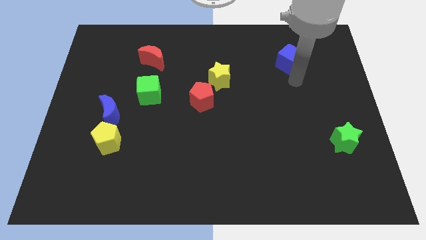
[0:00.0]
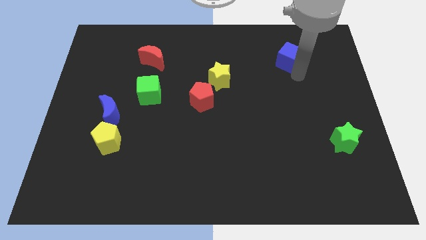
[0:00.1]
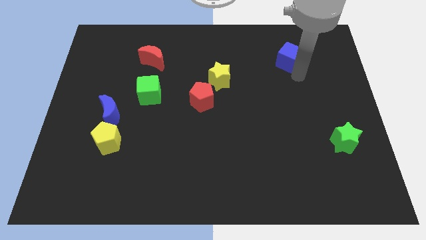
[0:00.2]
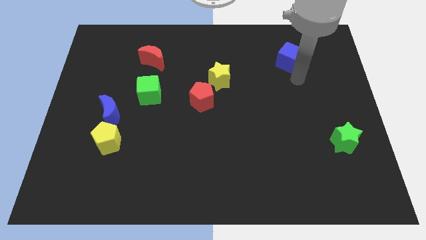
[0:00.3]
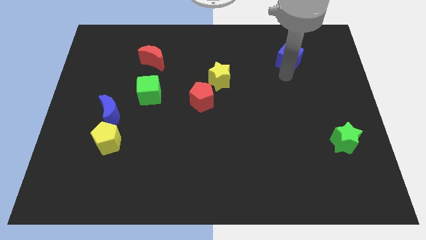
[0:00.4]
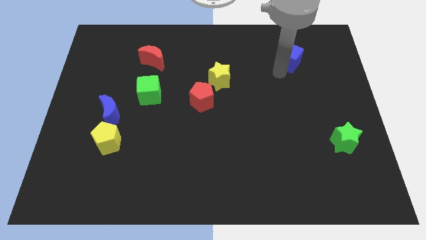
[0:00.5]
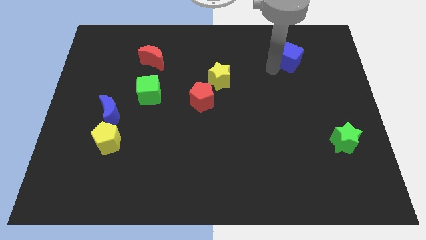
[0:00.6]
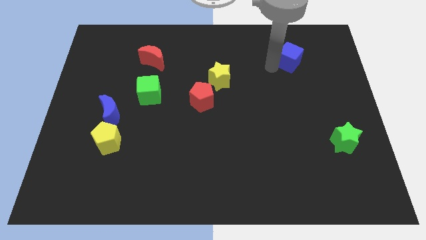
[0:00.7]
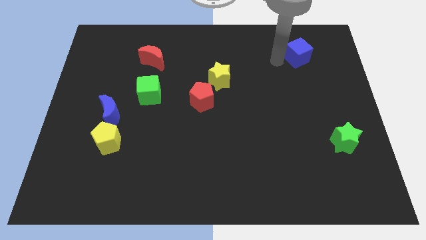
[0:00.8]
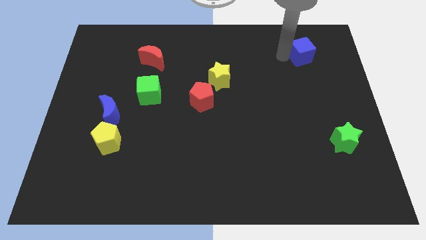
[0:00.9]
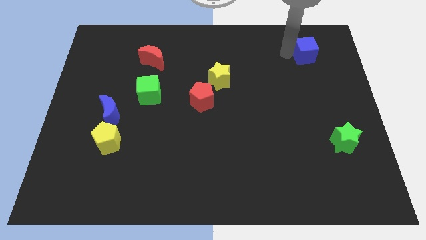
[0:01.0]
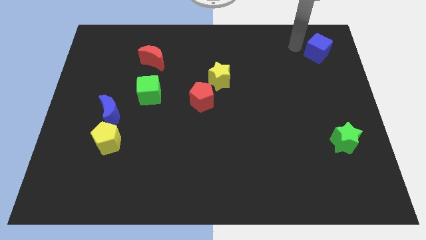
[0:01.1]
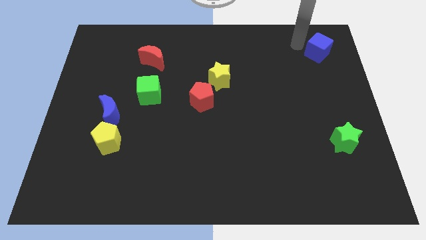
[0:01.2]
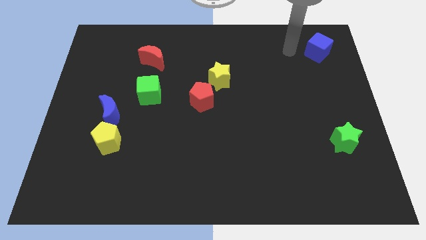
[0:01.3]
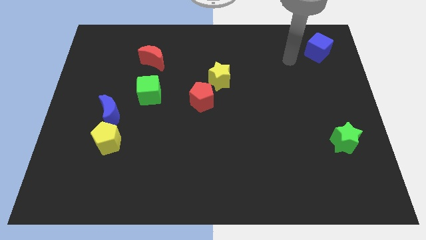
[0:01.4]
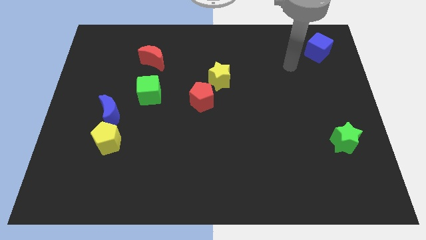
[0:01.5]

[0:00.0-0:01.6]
place the blue cube vertically above the green star

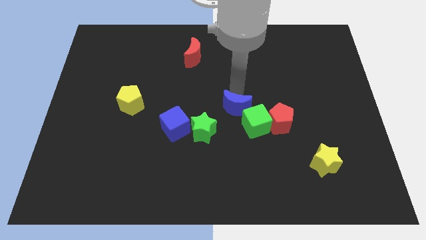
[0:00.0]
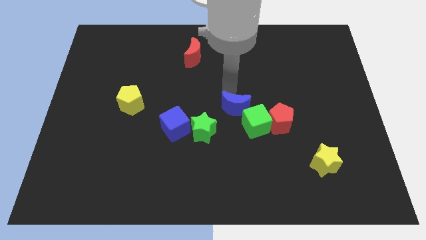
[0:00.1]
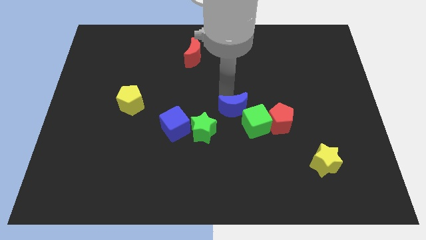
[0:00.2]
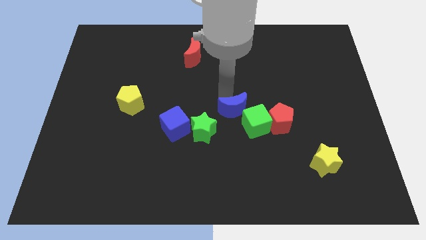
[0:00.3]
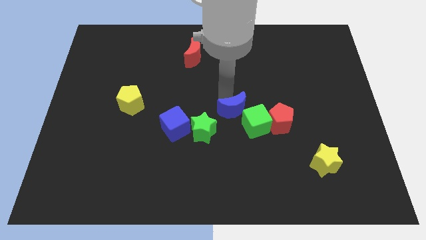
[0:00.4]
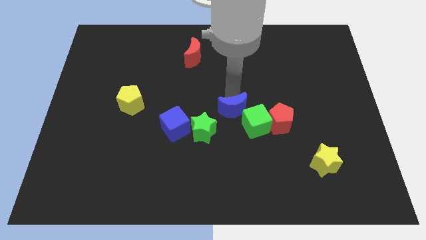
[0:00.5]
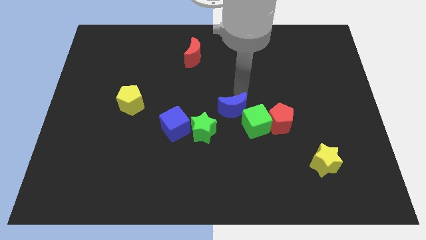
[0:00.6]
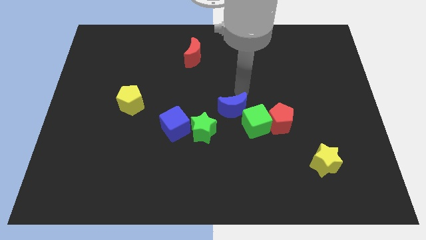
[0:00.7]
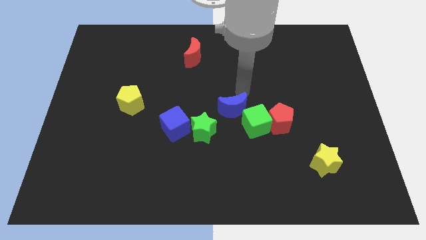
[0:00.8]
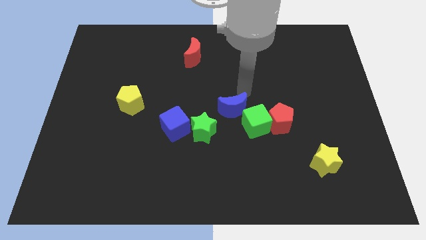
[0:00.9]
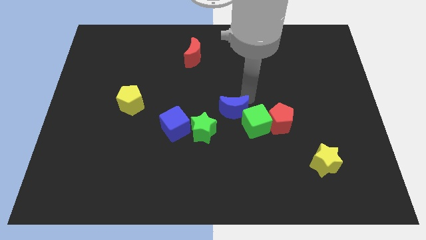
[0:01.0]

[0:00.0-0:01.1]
move the blue crescent to the center

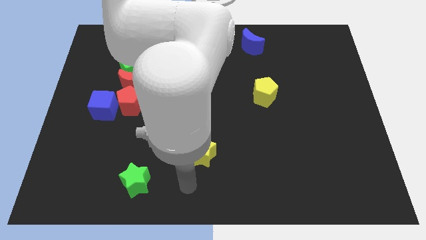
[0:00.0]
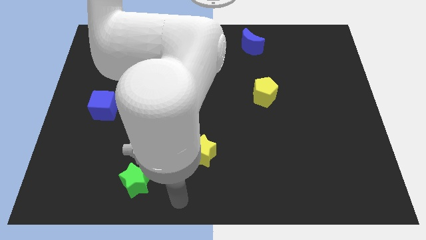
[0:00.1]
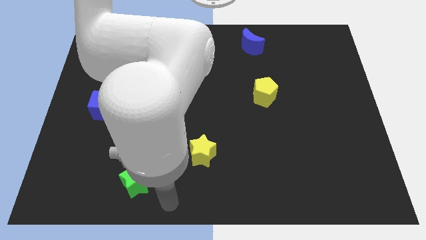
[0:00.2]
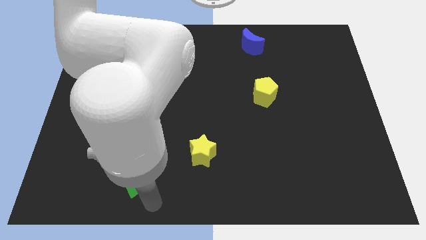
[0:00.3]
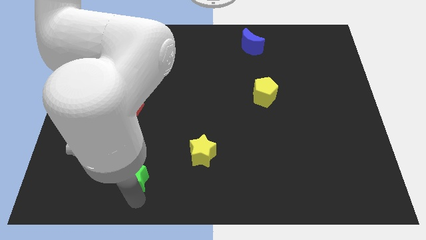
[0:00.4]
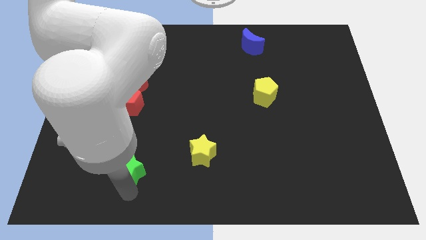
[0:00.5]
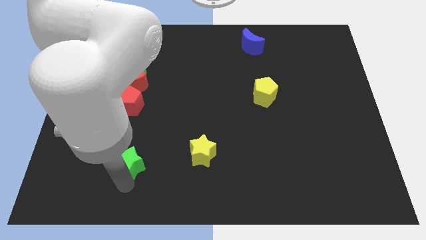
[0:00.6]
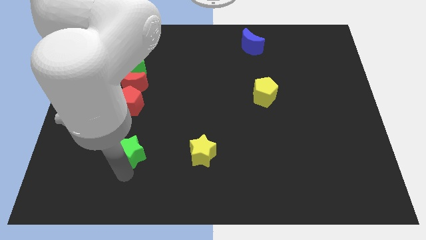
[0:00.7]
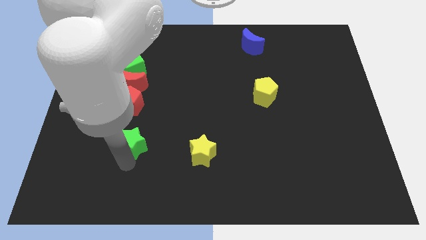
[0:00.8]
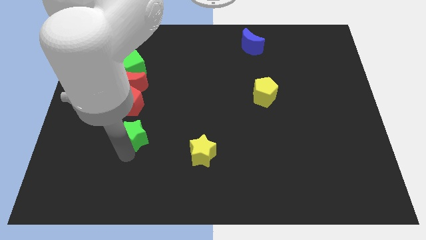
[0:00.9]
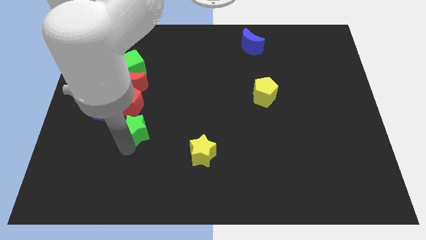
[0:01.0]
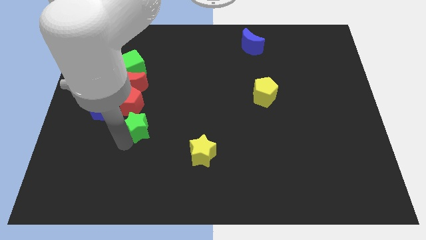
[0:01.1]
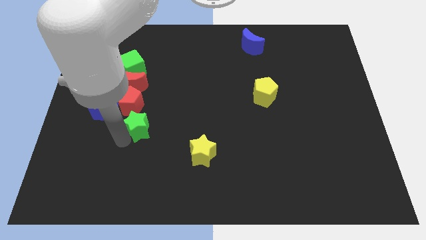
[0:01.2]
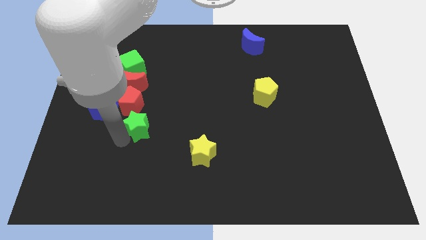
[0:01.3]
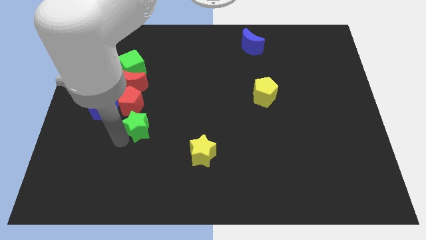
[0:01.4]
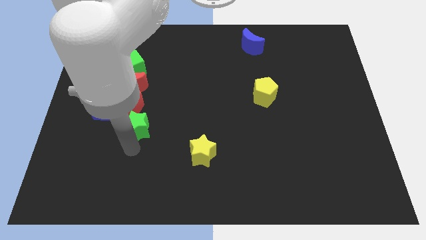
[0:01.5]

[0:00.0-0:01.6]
move the green star close to the red pentagon

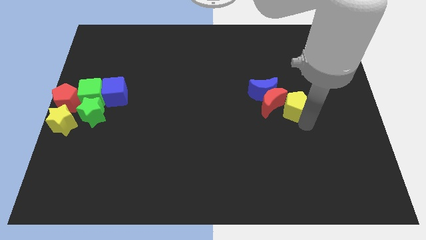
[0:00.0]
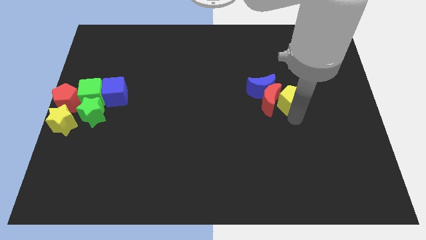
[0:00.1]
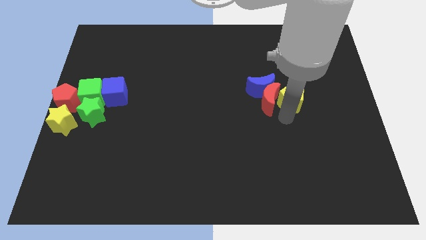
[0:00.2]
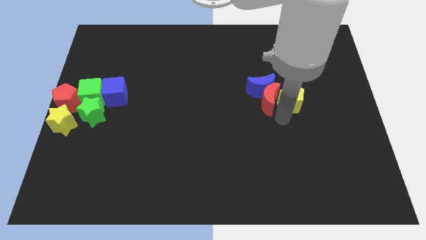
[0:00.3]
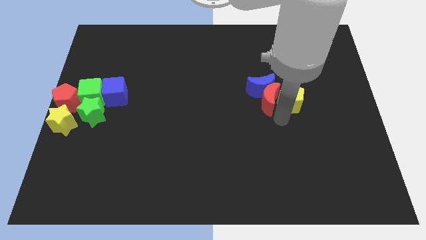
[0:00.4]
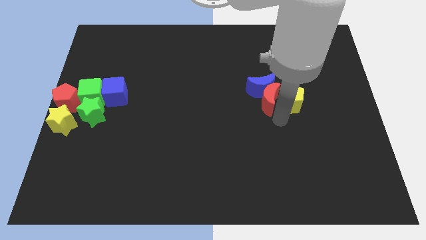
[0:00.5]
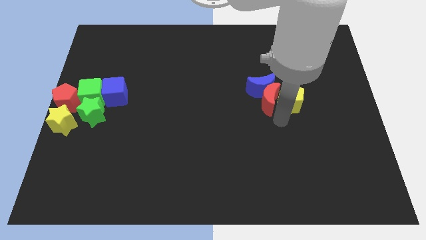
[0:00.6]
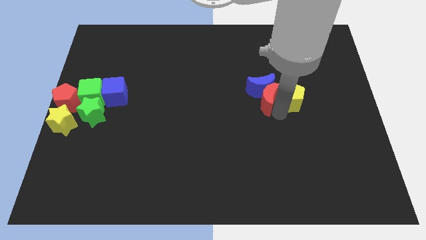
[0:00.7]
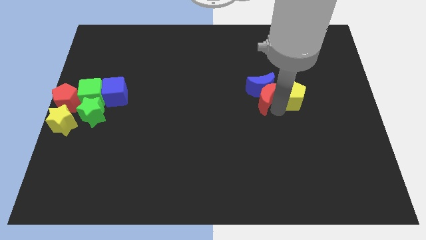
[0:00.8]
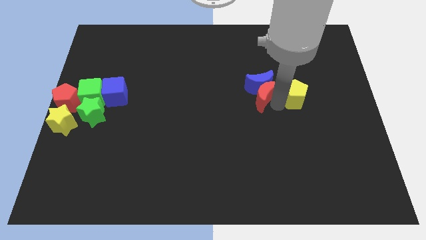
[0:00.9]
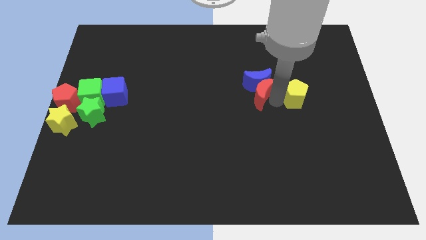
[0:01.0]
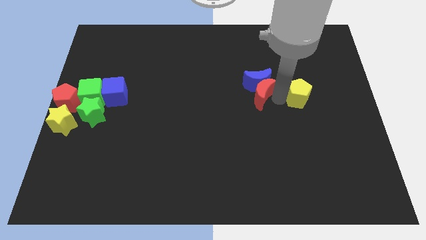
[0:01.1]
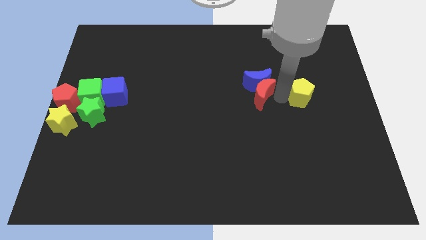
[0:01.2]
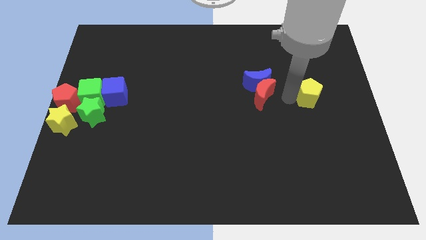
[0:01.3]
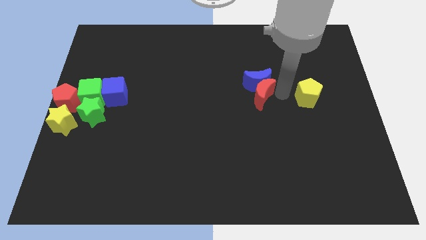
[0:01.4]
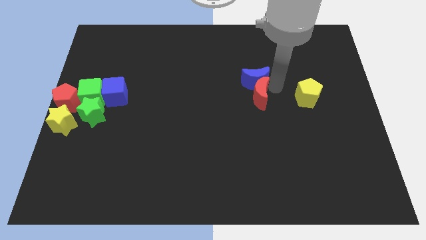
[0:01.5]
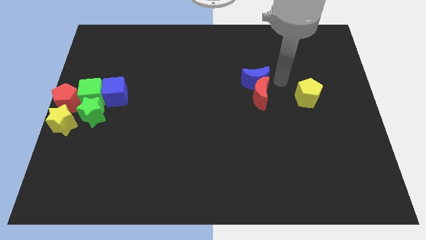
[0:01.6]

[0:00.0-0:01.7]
separate the yellow pentagon from the red crescent

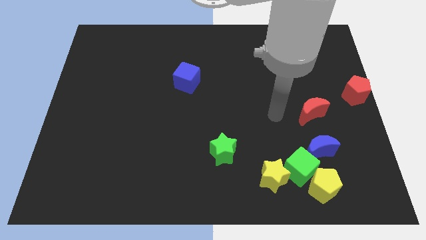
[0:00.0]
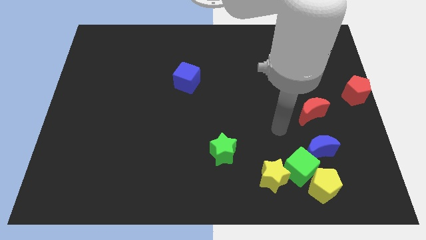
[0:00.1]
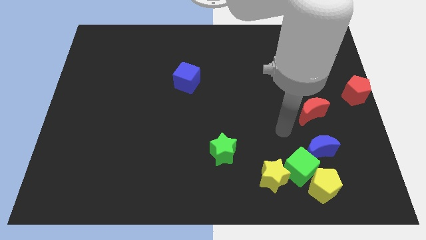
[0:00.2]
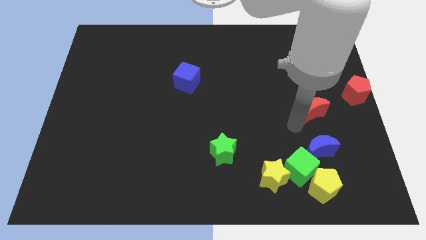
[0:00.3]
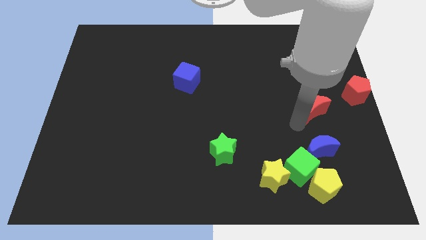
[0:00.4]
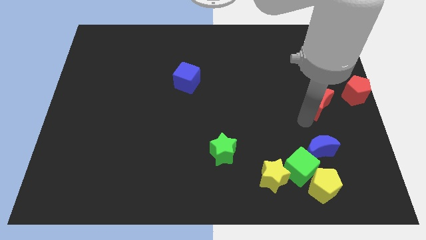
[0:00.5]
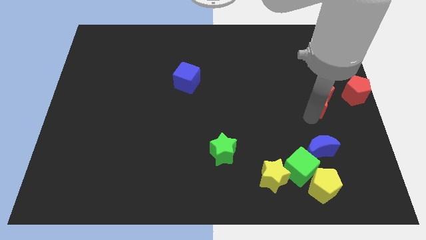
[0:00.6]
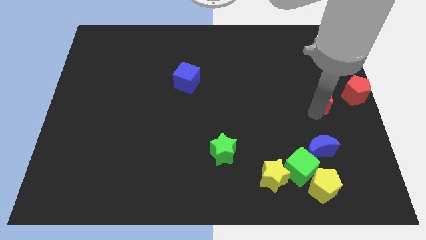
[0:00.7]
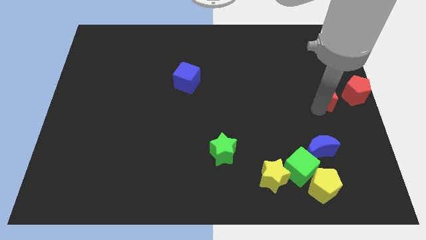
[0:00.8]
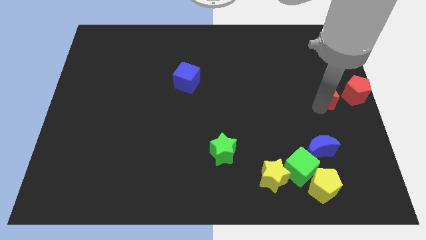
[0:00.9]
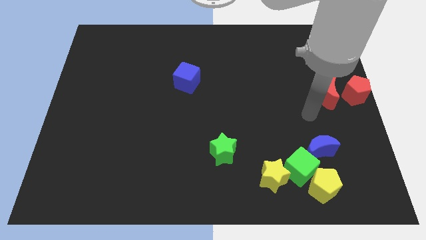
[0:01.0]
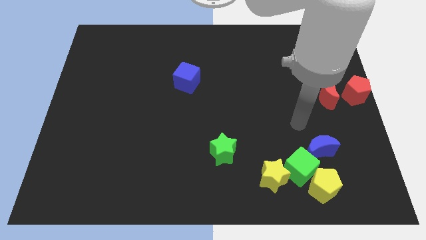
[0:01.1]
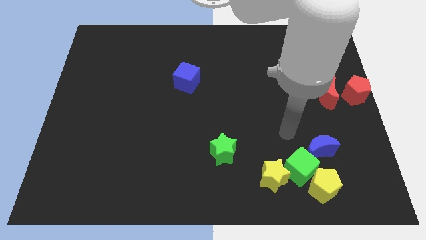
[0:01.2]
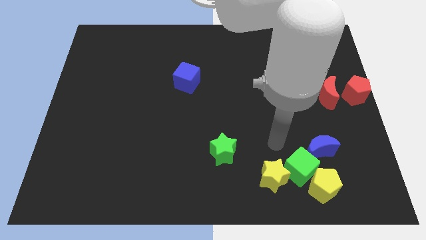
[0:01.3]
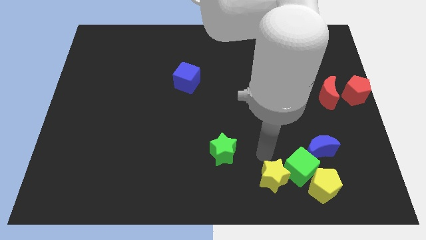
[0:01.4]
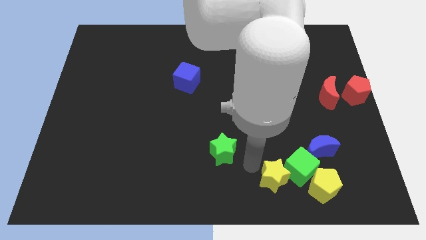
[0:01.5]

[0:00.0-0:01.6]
put the red crescent on the left side of the red pentagon

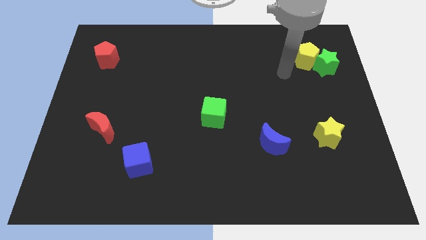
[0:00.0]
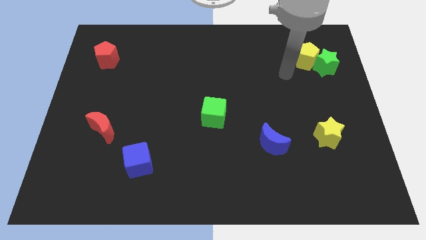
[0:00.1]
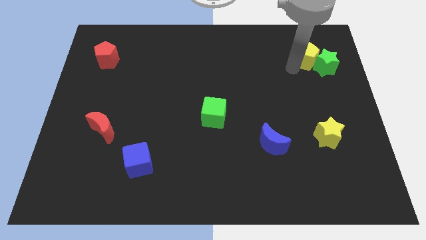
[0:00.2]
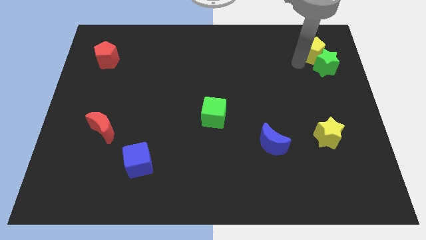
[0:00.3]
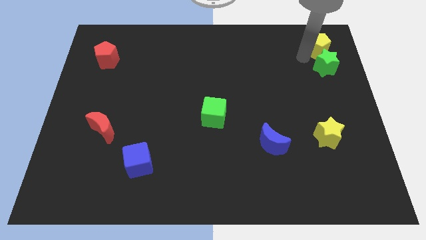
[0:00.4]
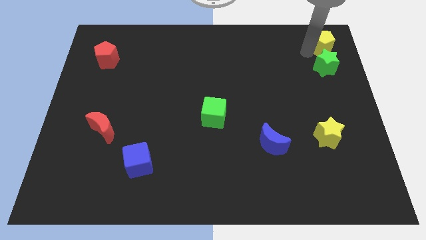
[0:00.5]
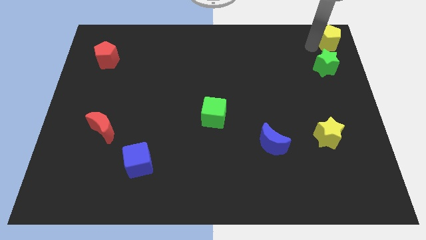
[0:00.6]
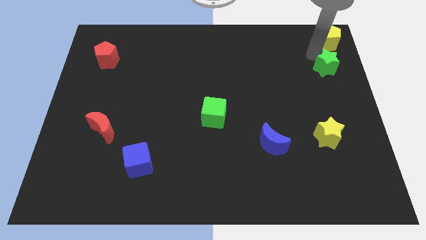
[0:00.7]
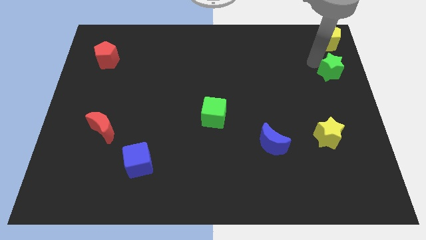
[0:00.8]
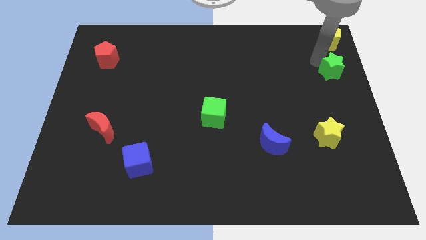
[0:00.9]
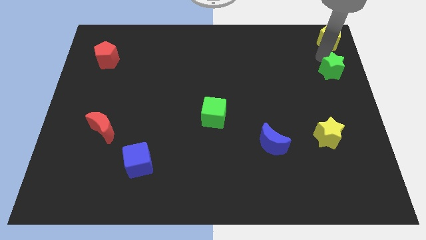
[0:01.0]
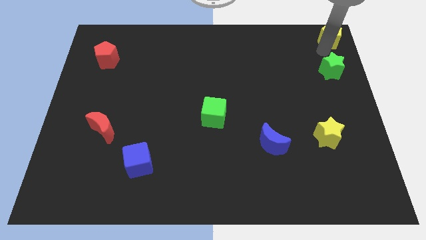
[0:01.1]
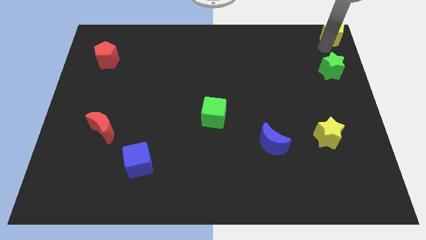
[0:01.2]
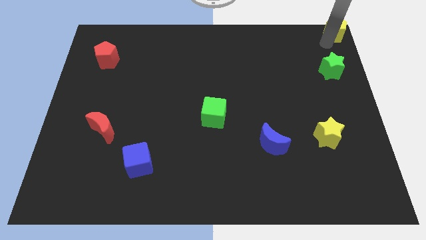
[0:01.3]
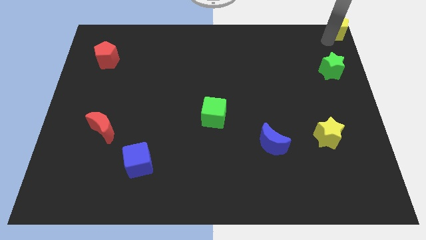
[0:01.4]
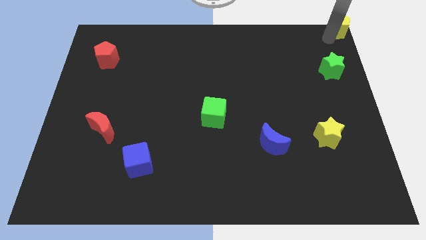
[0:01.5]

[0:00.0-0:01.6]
place the yellow pentagon on top right corner of the board
